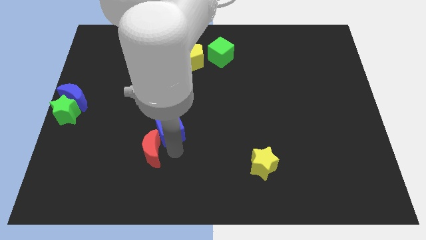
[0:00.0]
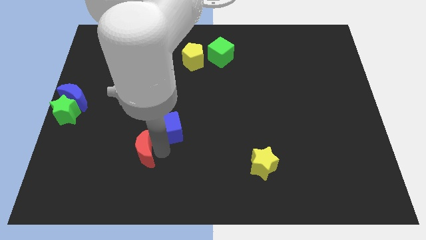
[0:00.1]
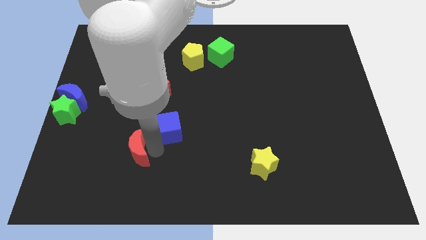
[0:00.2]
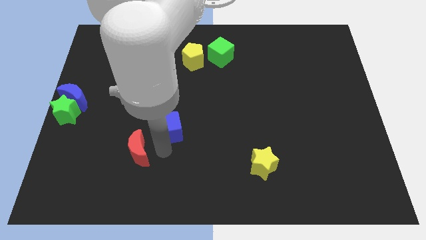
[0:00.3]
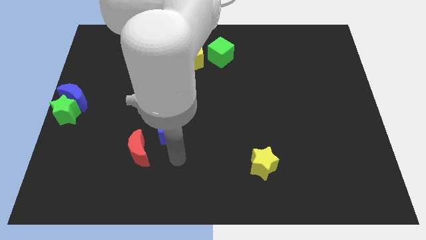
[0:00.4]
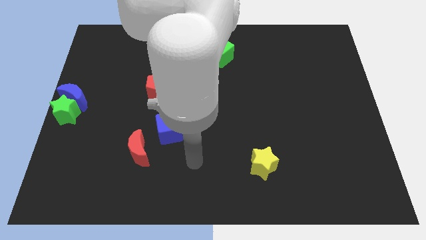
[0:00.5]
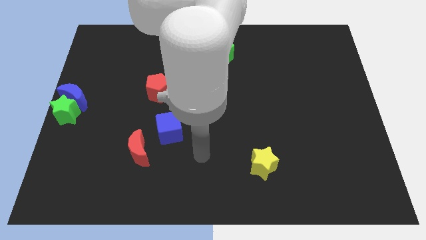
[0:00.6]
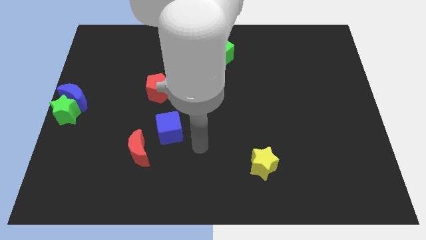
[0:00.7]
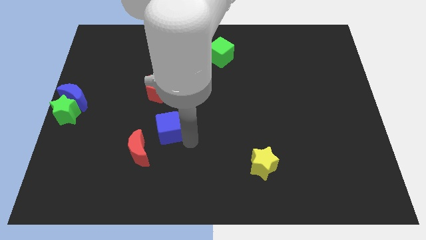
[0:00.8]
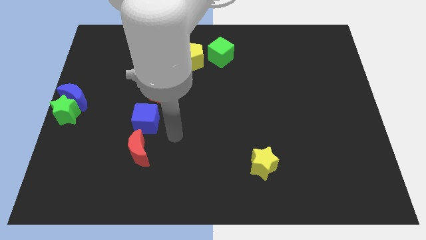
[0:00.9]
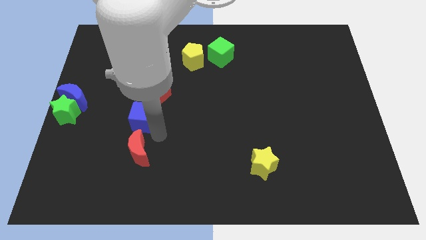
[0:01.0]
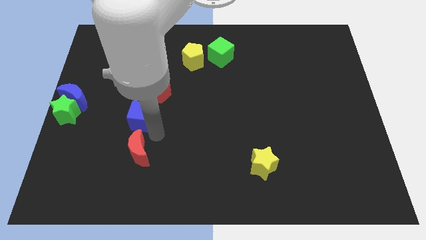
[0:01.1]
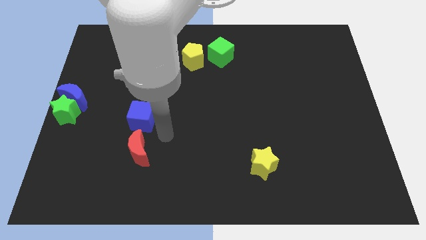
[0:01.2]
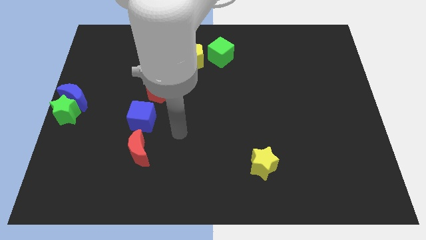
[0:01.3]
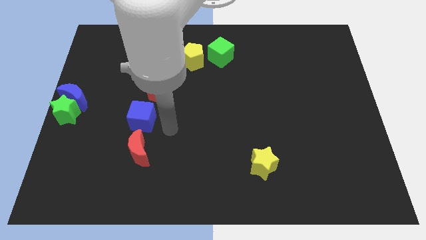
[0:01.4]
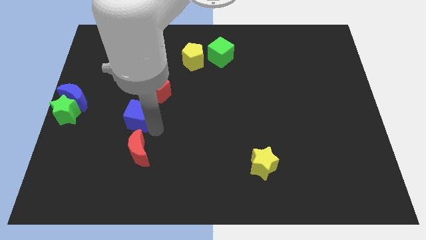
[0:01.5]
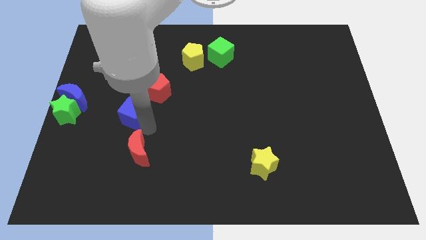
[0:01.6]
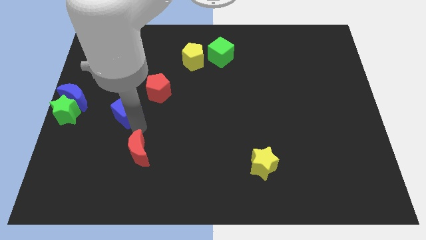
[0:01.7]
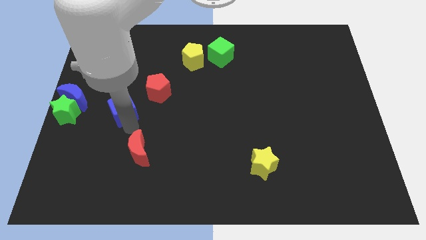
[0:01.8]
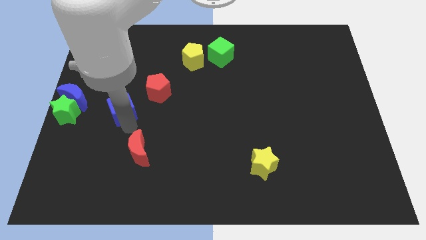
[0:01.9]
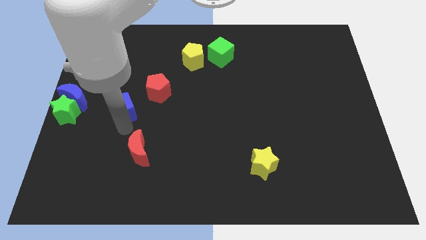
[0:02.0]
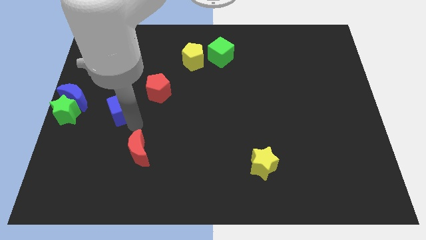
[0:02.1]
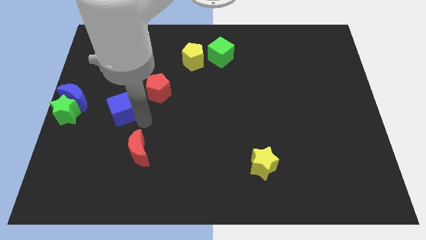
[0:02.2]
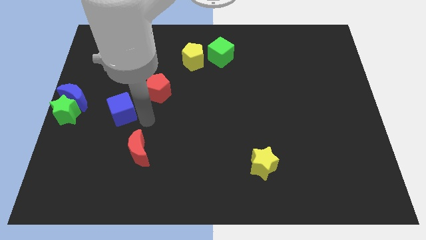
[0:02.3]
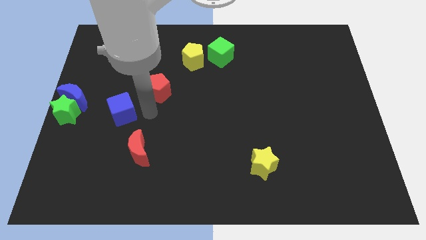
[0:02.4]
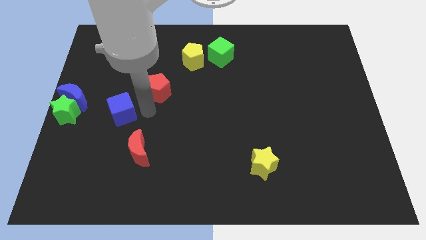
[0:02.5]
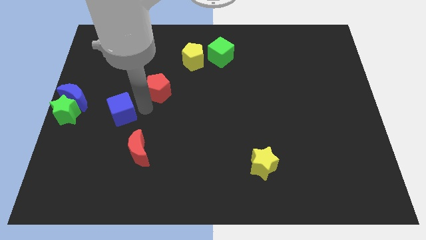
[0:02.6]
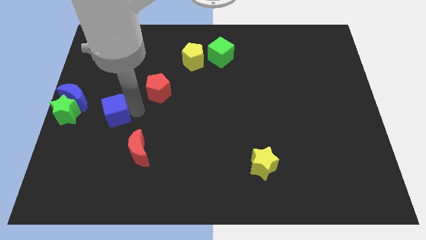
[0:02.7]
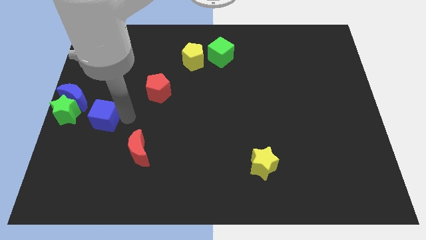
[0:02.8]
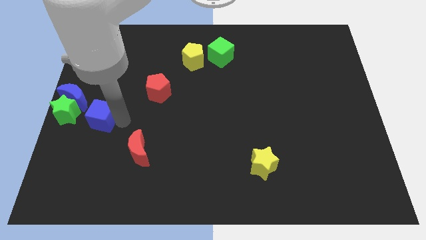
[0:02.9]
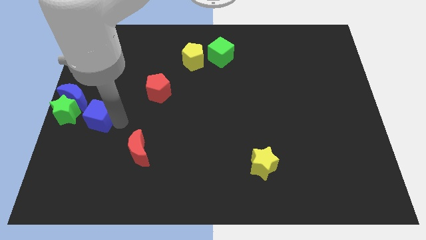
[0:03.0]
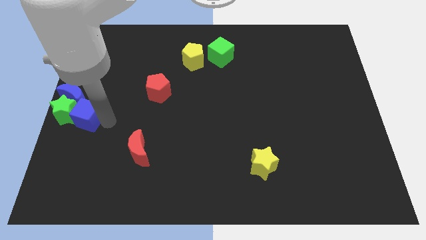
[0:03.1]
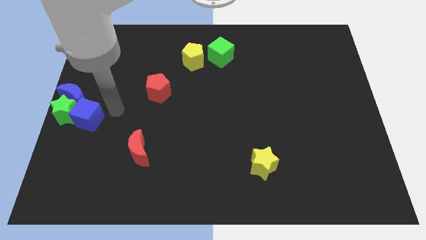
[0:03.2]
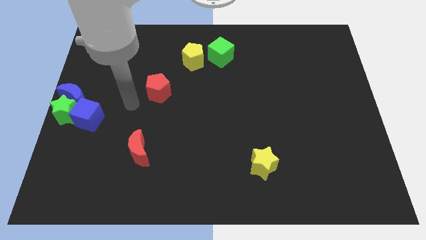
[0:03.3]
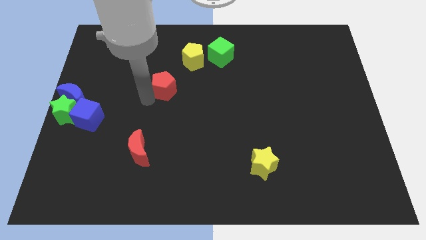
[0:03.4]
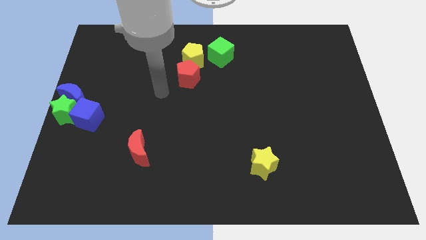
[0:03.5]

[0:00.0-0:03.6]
move blue cube into the green star

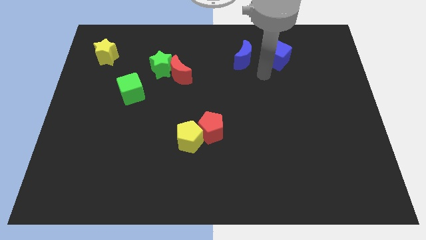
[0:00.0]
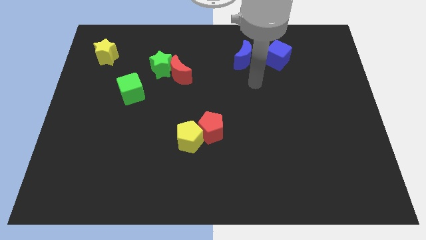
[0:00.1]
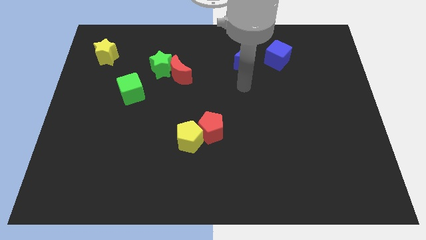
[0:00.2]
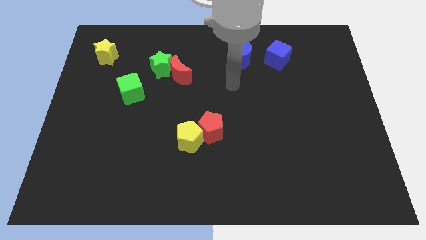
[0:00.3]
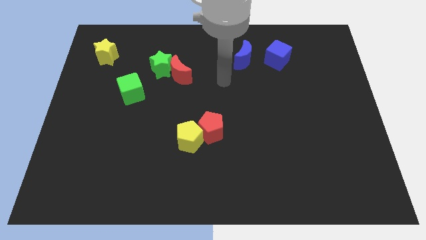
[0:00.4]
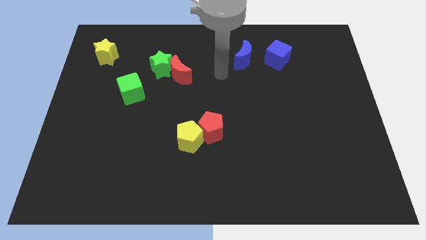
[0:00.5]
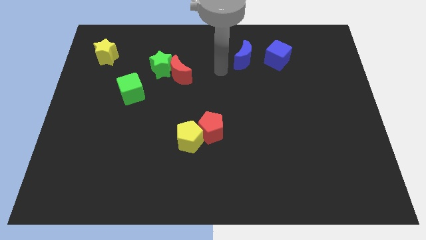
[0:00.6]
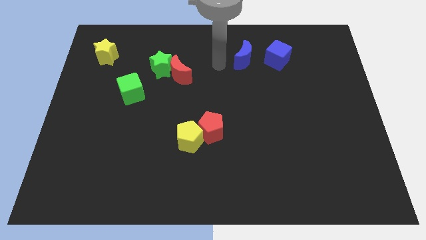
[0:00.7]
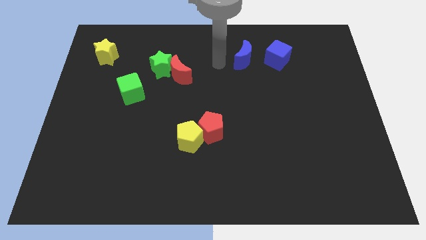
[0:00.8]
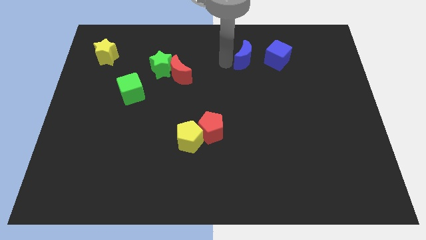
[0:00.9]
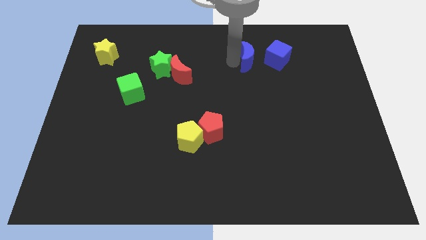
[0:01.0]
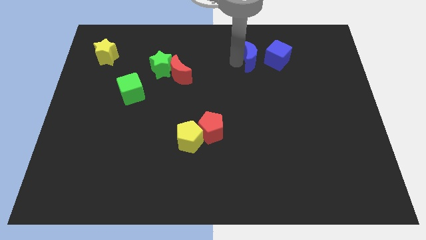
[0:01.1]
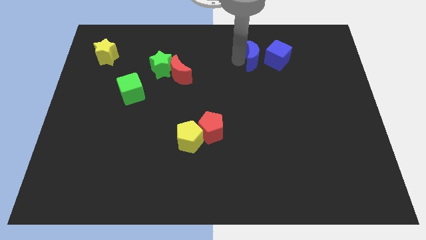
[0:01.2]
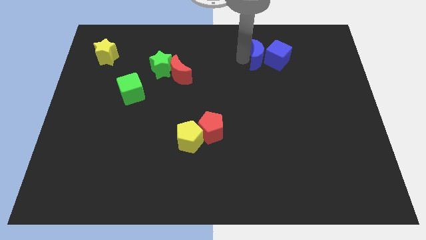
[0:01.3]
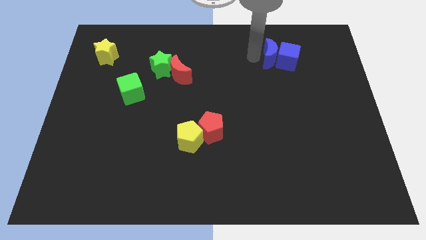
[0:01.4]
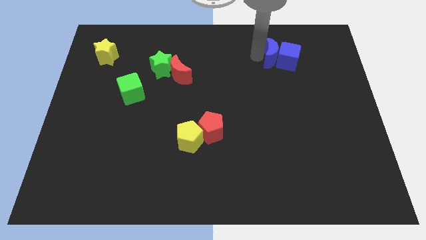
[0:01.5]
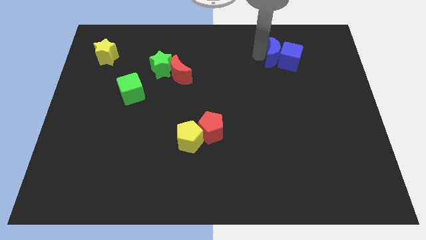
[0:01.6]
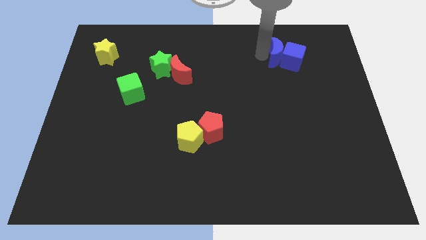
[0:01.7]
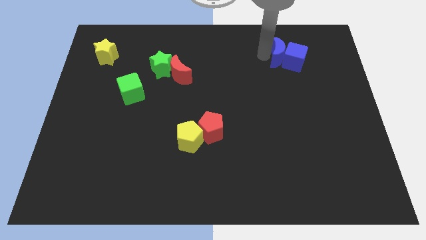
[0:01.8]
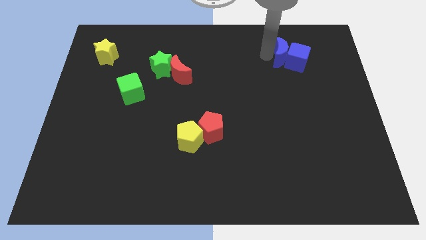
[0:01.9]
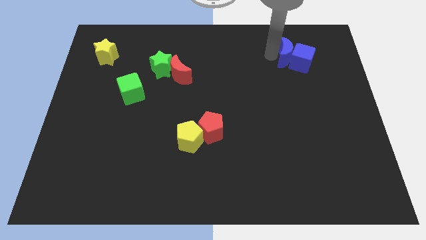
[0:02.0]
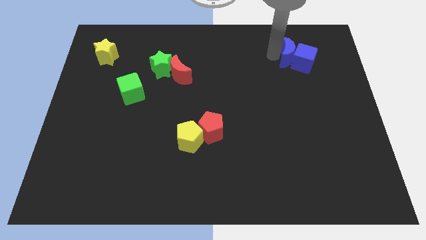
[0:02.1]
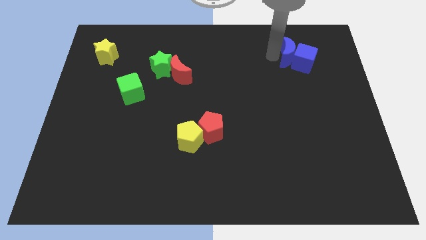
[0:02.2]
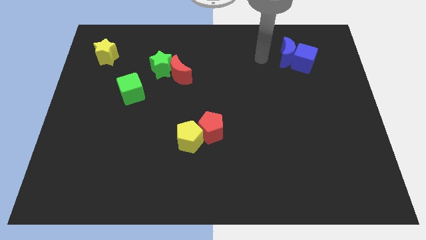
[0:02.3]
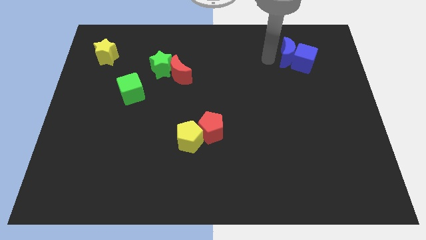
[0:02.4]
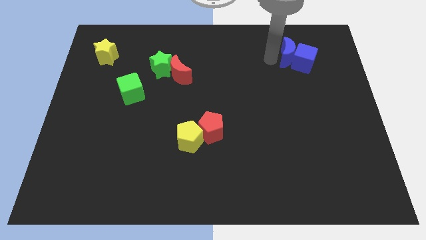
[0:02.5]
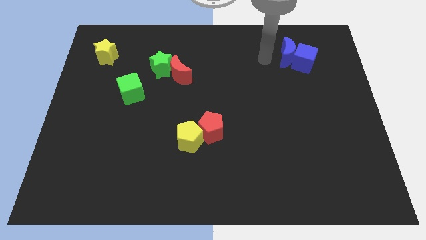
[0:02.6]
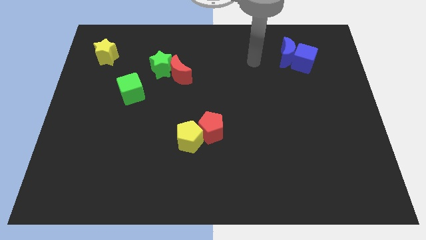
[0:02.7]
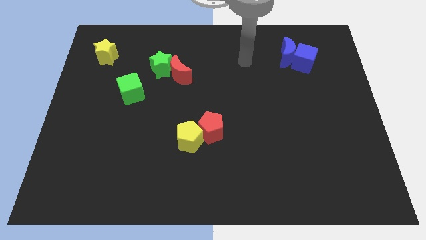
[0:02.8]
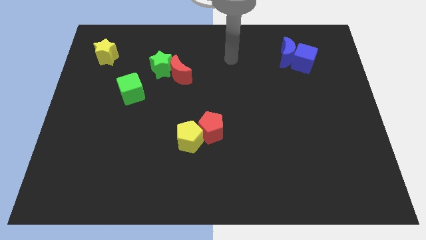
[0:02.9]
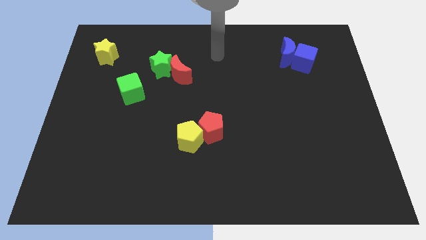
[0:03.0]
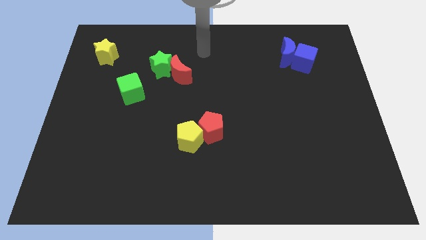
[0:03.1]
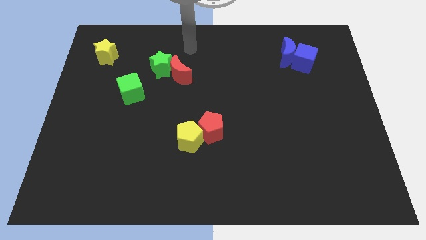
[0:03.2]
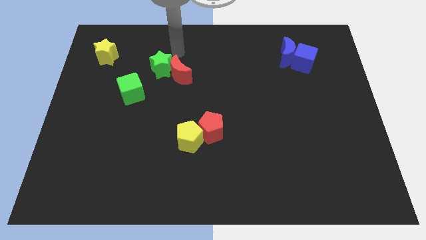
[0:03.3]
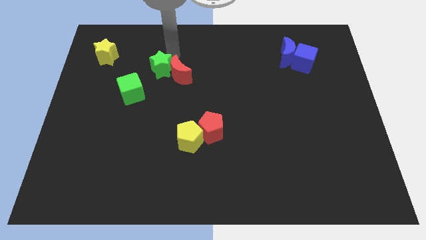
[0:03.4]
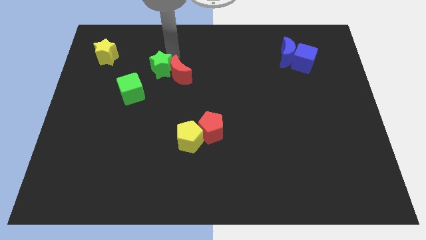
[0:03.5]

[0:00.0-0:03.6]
push the blue moon into the blue cube

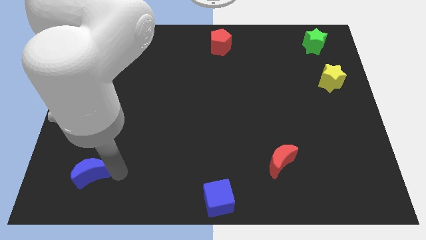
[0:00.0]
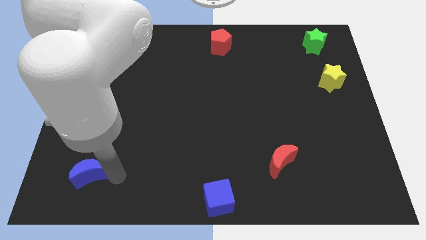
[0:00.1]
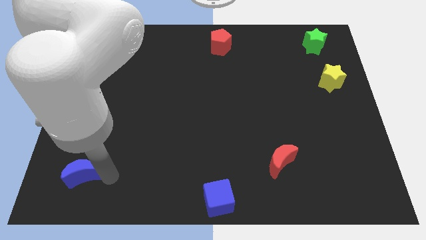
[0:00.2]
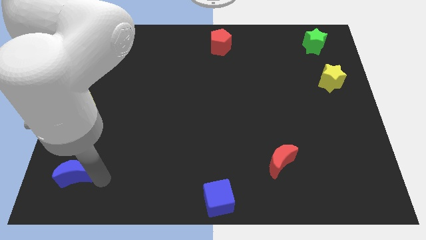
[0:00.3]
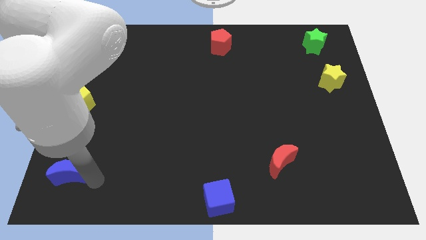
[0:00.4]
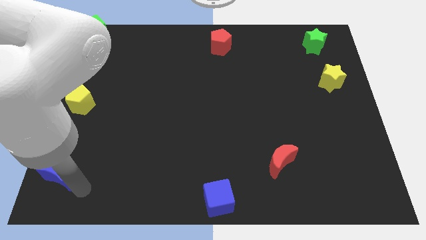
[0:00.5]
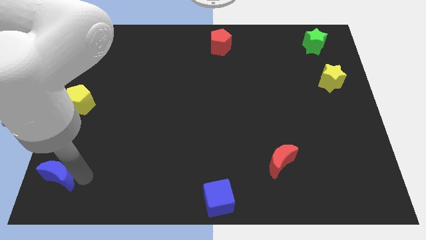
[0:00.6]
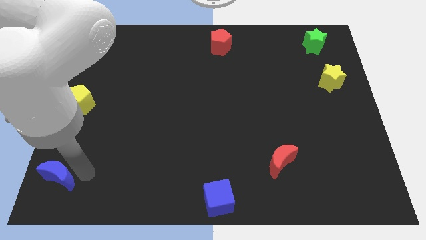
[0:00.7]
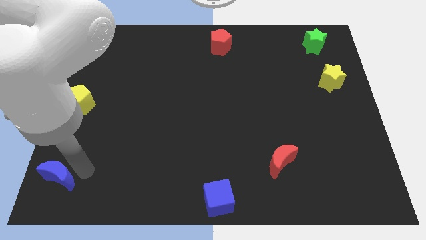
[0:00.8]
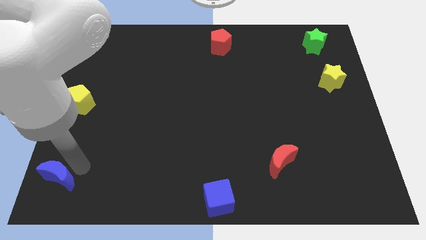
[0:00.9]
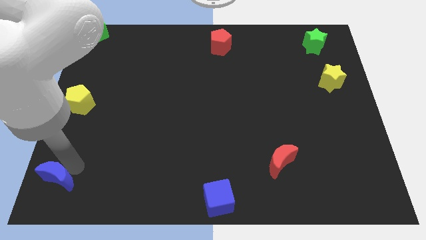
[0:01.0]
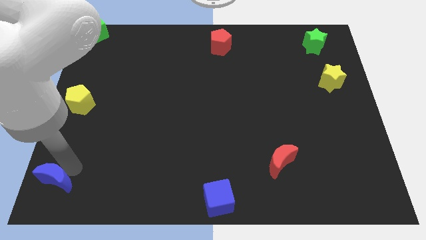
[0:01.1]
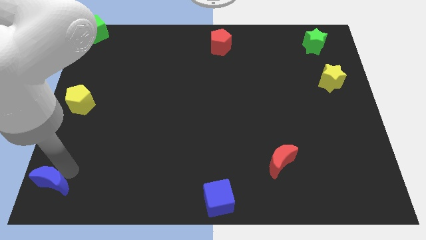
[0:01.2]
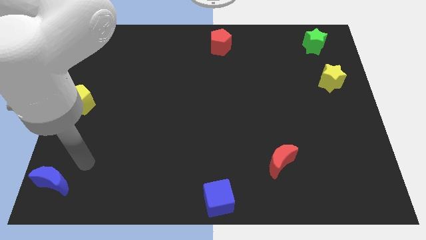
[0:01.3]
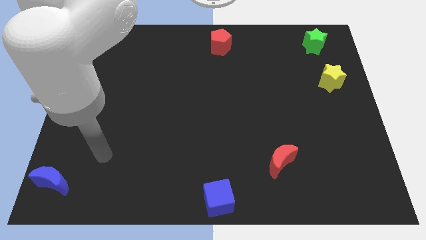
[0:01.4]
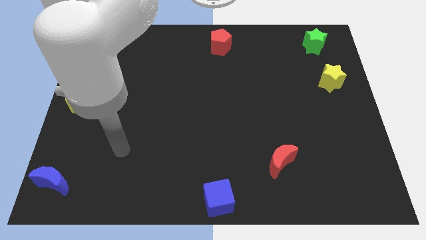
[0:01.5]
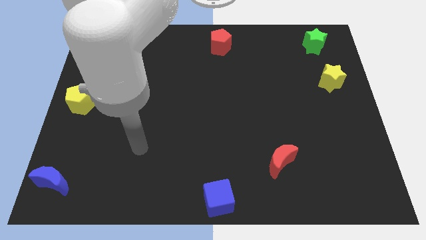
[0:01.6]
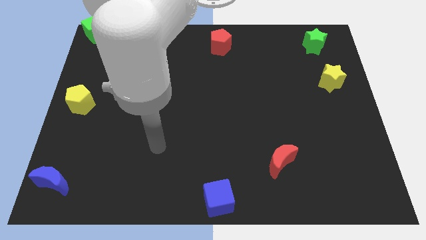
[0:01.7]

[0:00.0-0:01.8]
push the blue crescent to the bottom left corner
